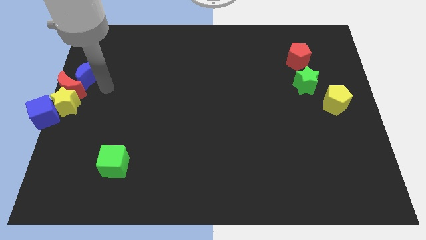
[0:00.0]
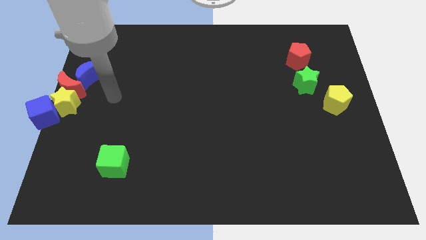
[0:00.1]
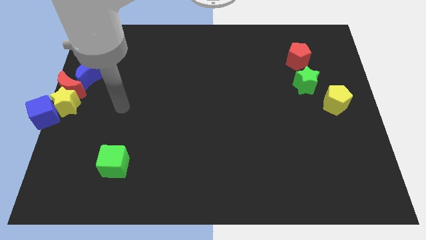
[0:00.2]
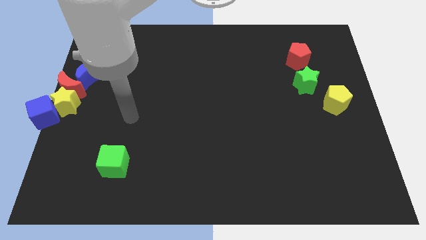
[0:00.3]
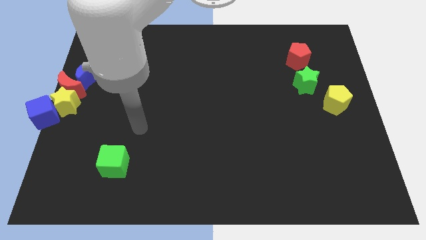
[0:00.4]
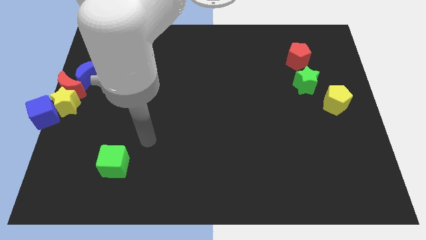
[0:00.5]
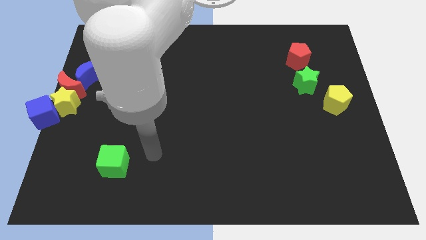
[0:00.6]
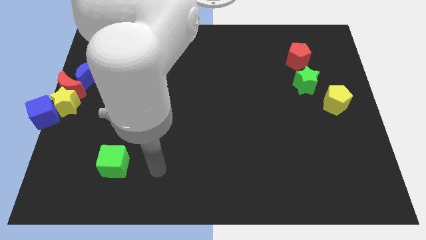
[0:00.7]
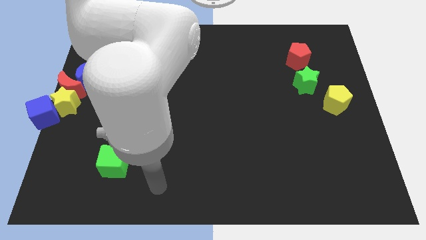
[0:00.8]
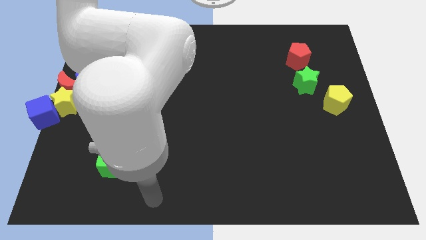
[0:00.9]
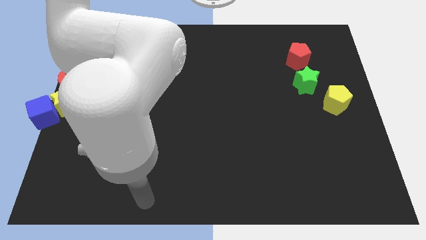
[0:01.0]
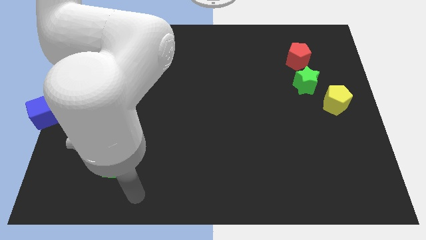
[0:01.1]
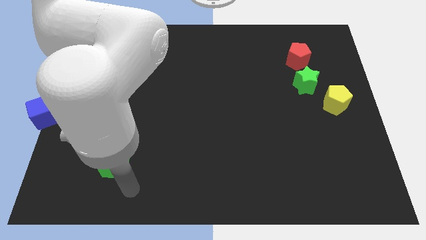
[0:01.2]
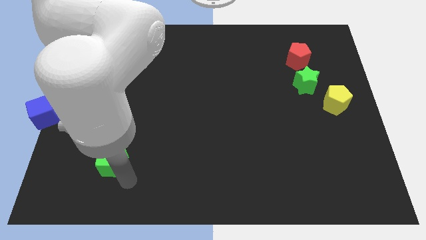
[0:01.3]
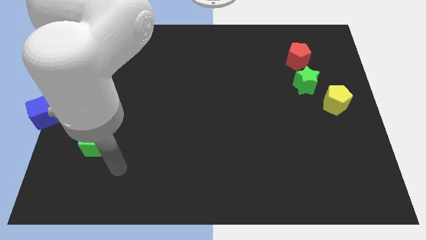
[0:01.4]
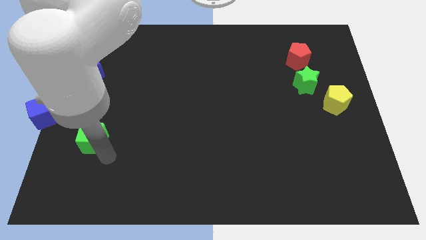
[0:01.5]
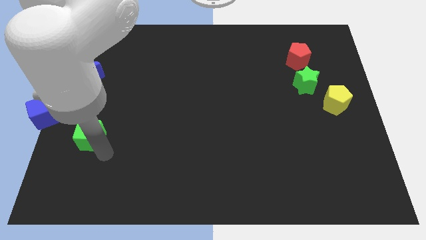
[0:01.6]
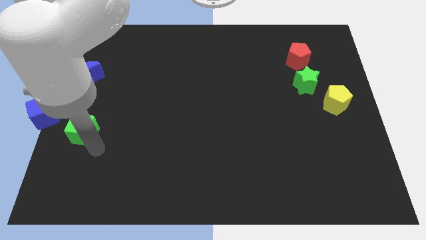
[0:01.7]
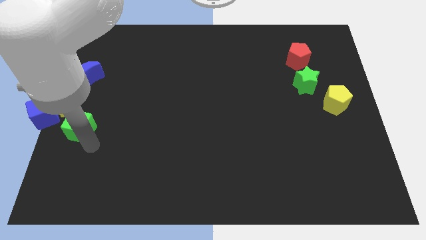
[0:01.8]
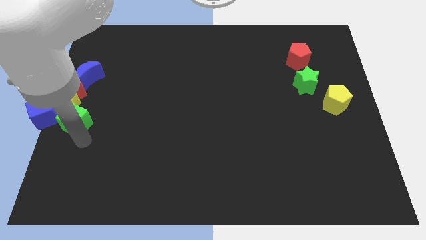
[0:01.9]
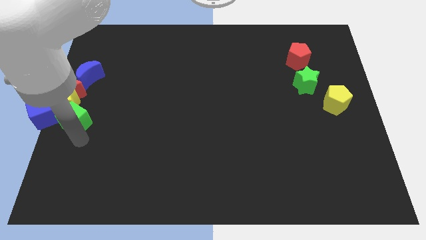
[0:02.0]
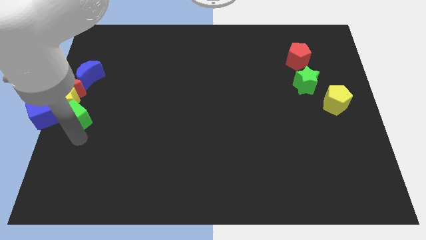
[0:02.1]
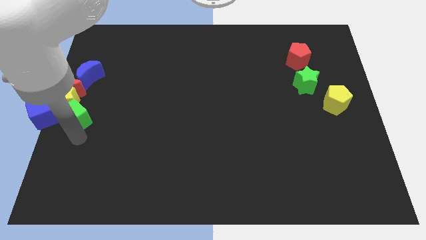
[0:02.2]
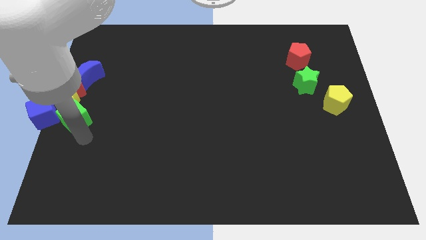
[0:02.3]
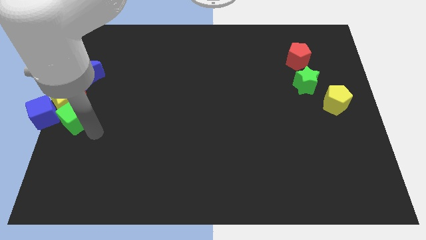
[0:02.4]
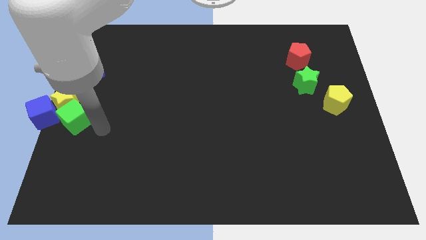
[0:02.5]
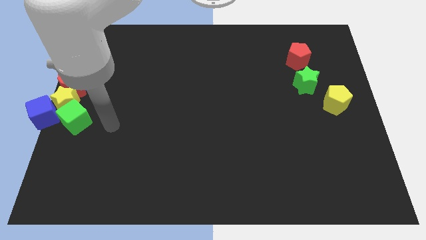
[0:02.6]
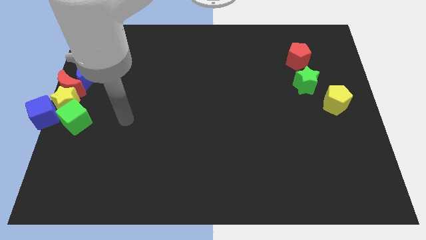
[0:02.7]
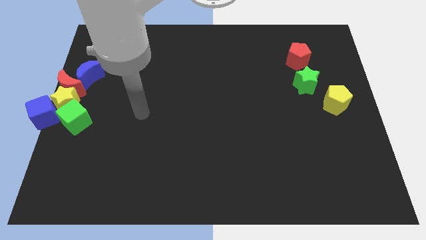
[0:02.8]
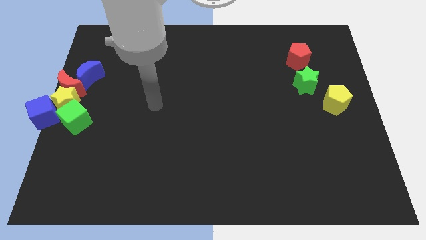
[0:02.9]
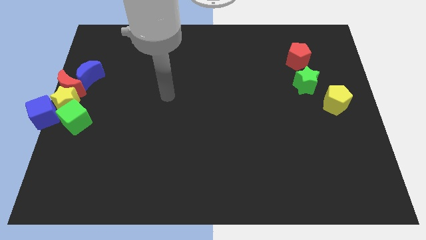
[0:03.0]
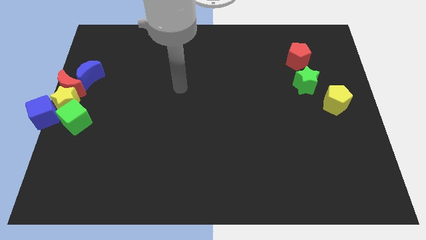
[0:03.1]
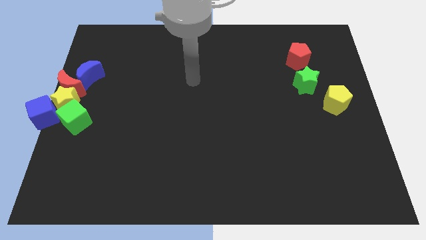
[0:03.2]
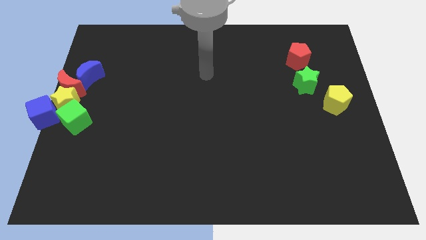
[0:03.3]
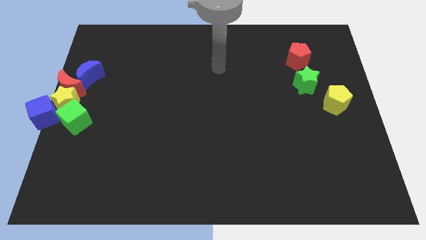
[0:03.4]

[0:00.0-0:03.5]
push the green cube into the yellow star

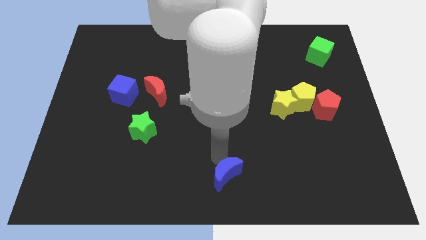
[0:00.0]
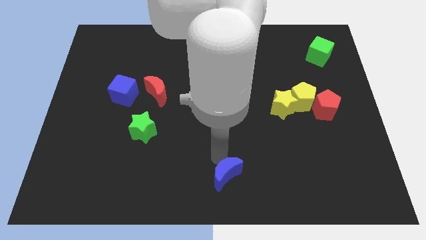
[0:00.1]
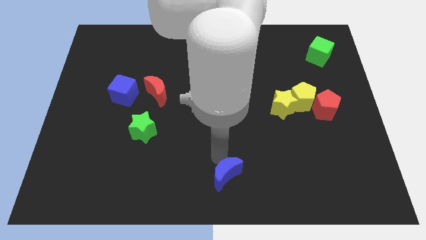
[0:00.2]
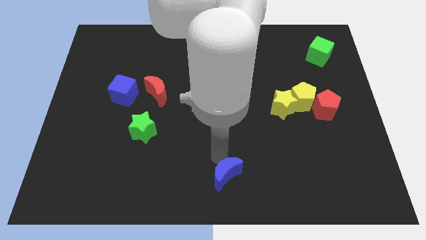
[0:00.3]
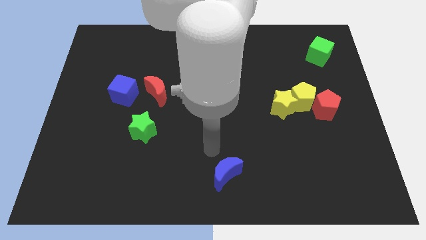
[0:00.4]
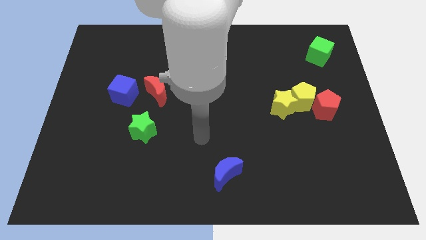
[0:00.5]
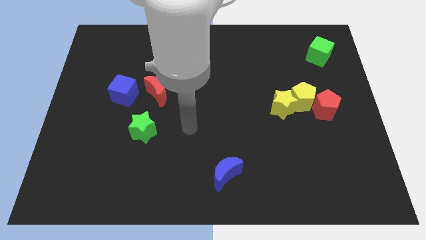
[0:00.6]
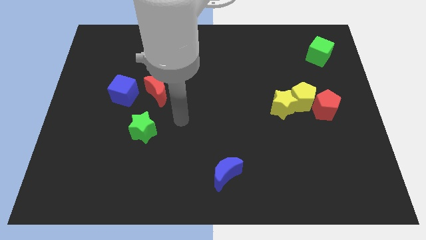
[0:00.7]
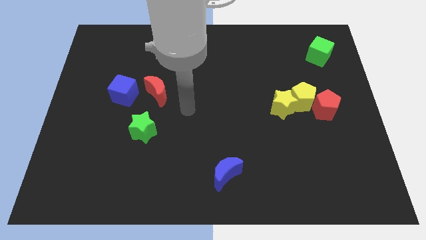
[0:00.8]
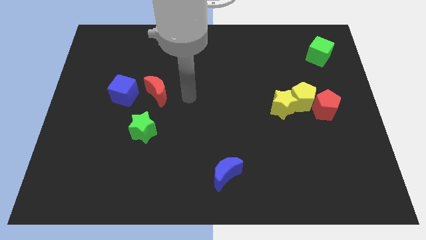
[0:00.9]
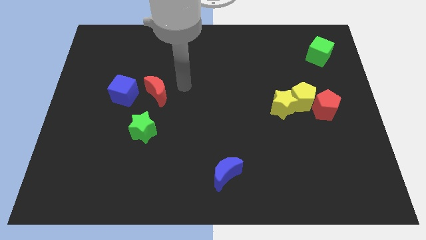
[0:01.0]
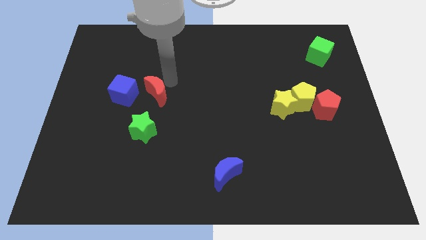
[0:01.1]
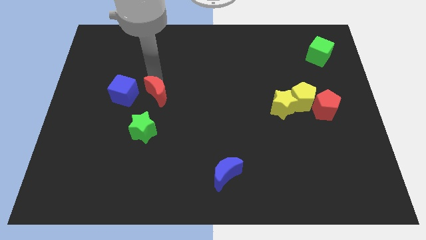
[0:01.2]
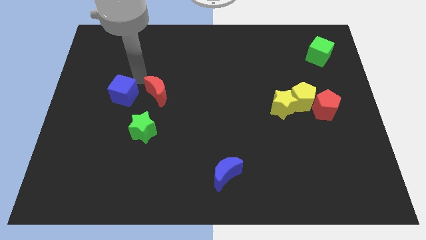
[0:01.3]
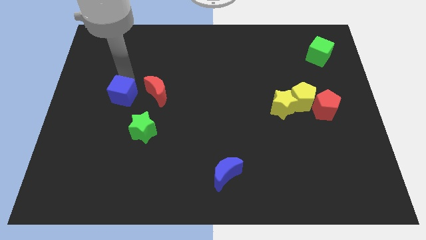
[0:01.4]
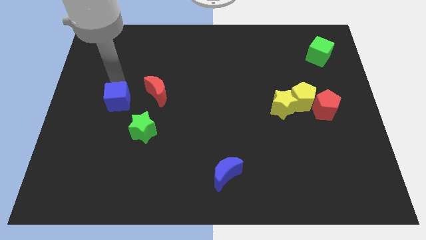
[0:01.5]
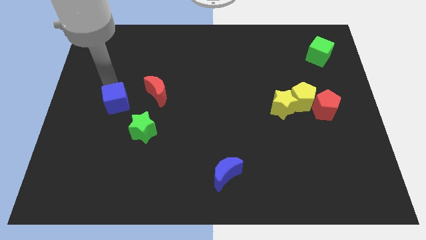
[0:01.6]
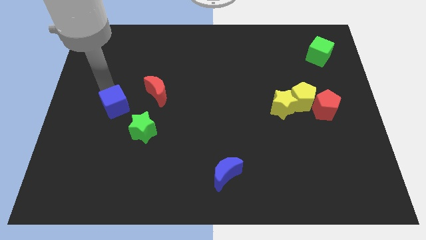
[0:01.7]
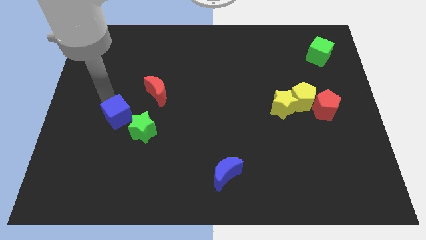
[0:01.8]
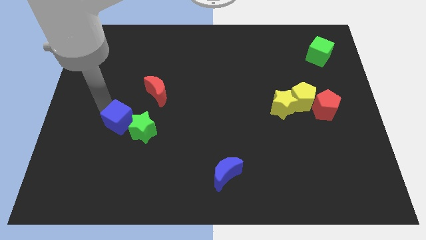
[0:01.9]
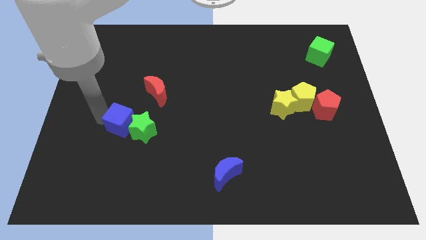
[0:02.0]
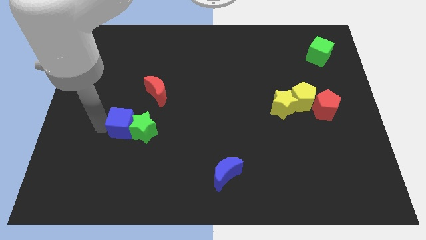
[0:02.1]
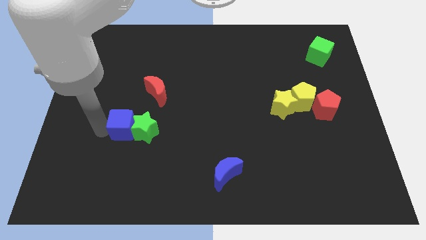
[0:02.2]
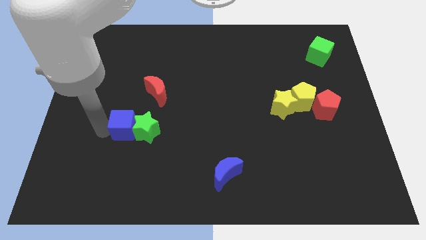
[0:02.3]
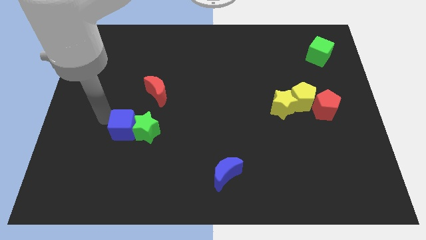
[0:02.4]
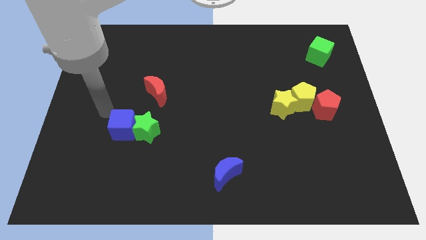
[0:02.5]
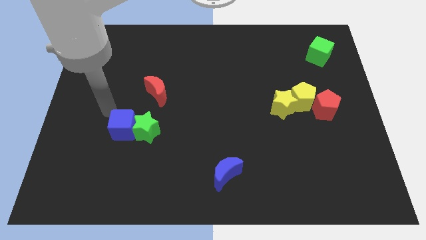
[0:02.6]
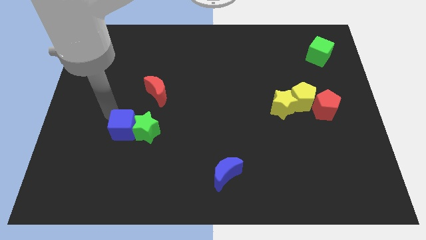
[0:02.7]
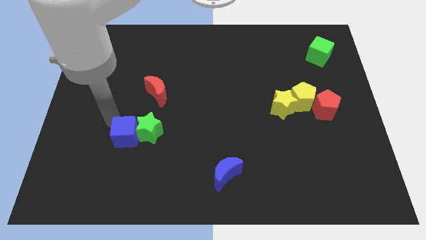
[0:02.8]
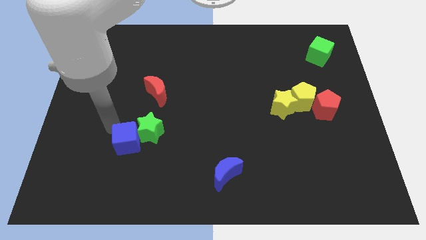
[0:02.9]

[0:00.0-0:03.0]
move the blue cube to the diagonal bottom left of green star

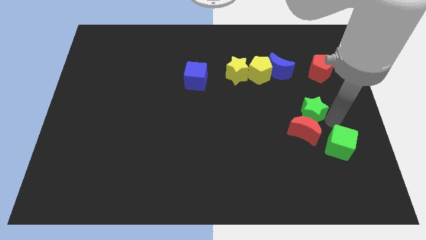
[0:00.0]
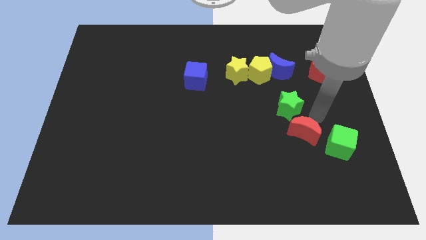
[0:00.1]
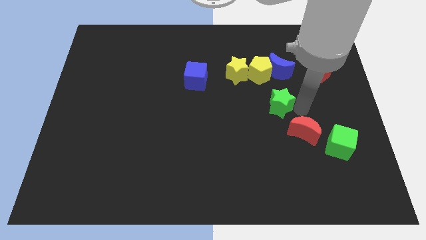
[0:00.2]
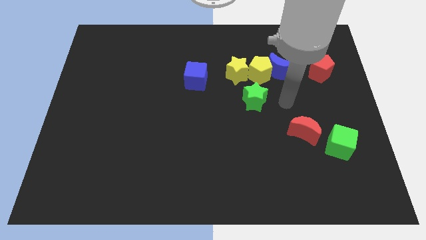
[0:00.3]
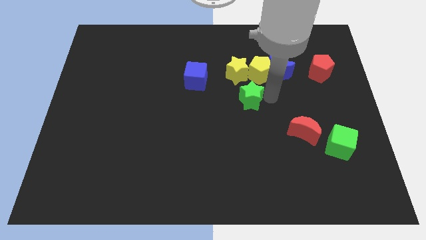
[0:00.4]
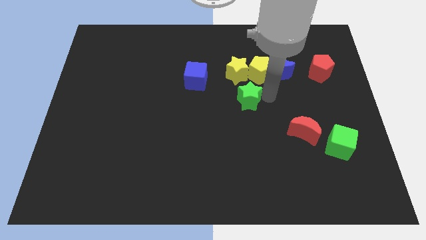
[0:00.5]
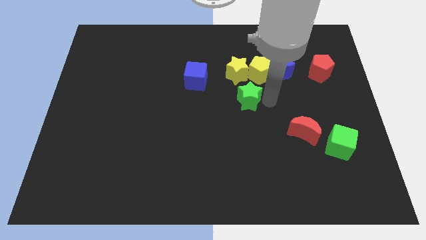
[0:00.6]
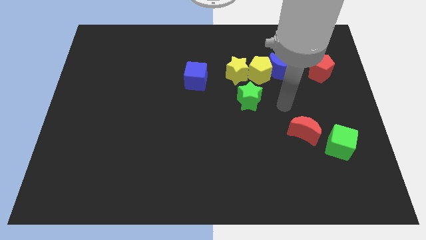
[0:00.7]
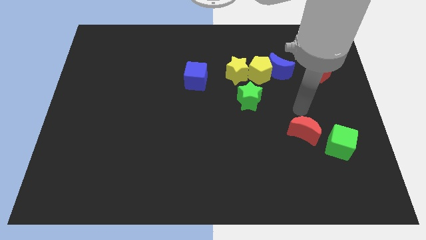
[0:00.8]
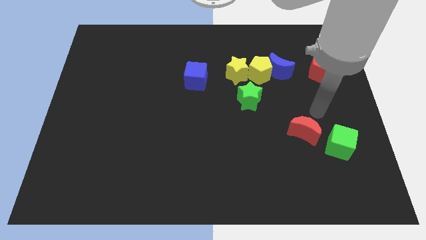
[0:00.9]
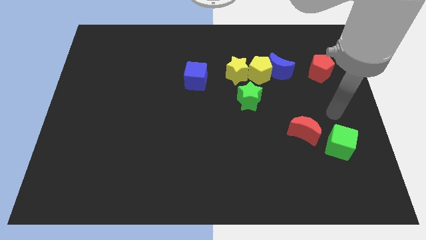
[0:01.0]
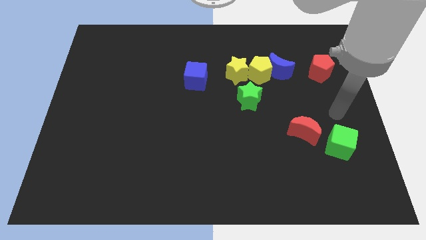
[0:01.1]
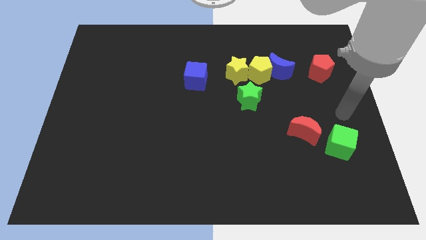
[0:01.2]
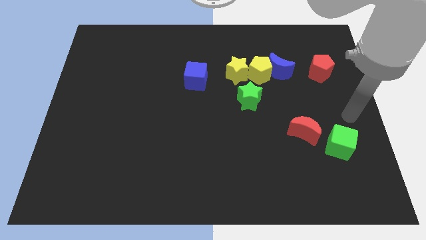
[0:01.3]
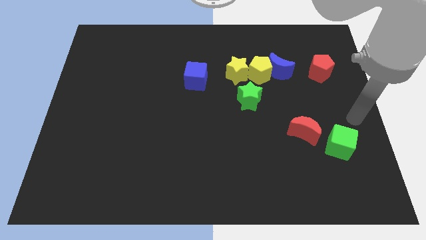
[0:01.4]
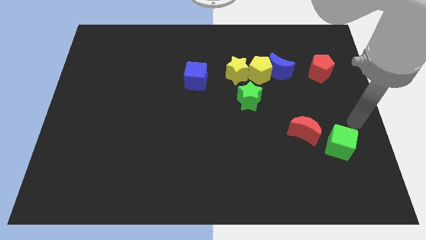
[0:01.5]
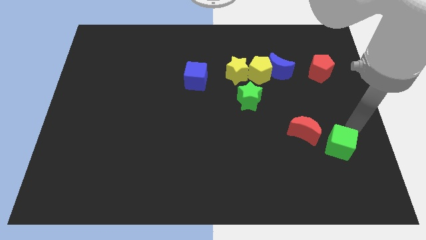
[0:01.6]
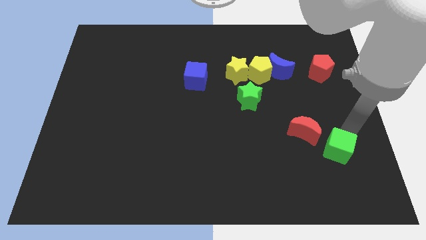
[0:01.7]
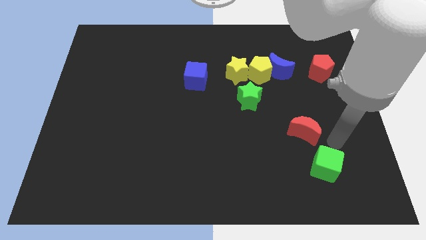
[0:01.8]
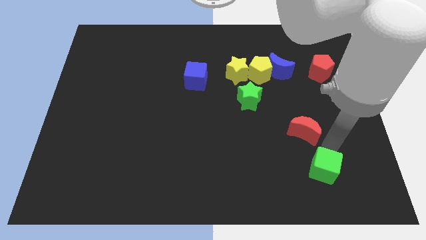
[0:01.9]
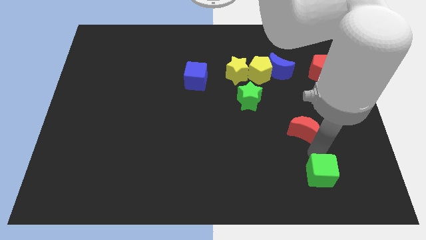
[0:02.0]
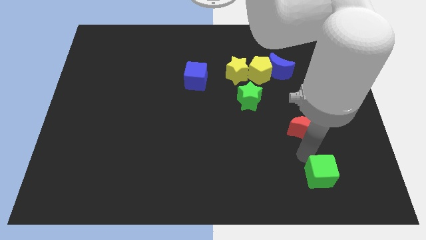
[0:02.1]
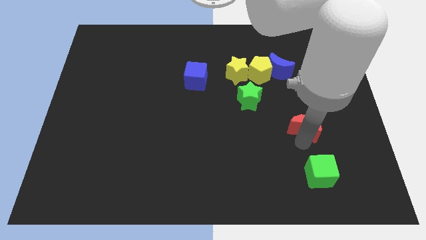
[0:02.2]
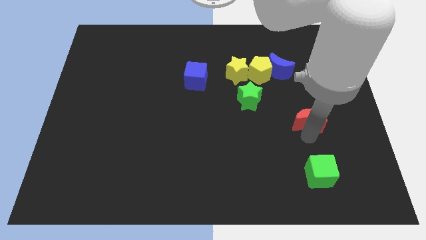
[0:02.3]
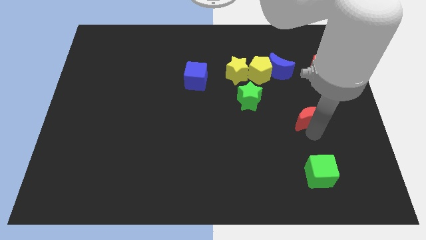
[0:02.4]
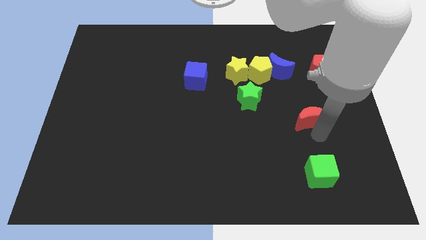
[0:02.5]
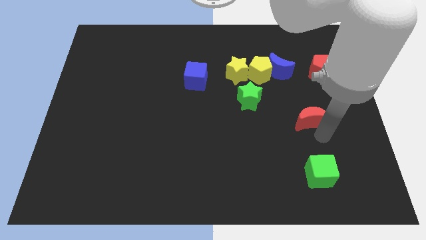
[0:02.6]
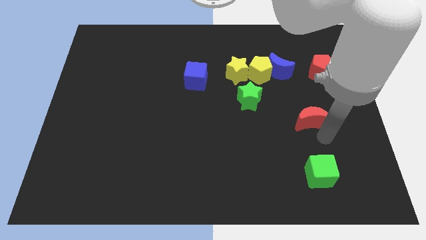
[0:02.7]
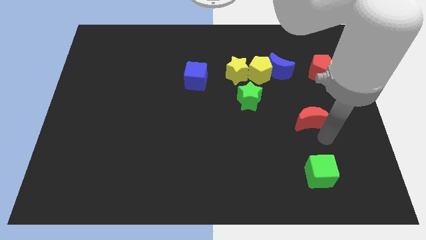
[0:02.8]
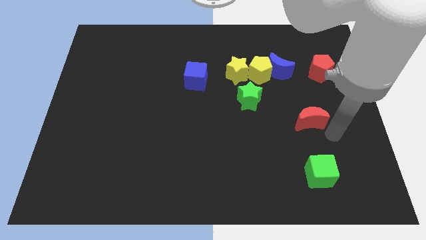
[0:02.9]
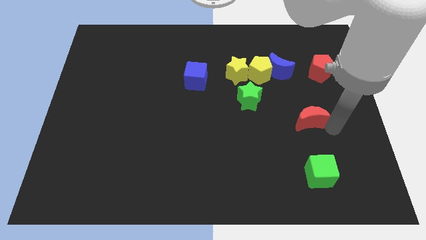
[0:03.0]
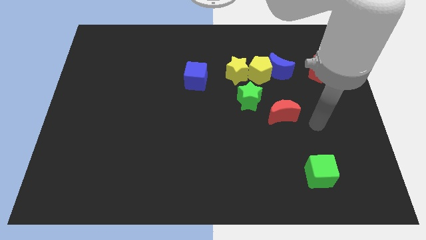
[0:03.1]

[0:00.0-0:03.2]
move the green cube vertically to the bottom of the red moon
